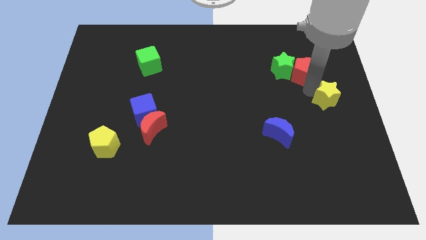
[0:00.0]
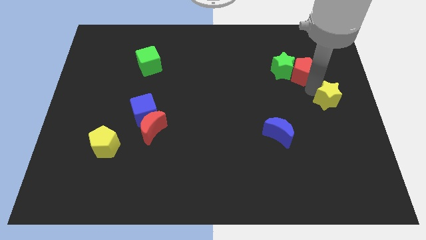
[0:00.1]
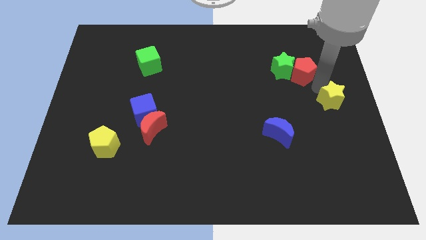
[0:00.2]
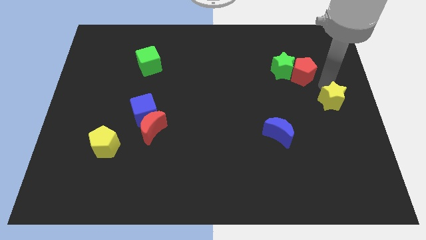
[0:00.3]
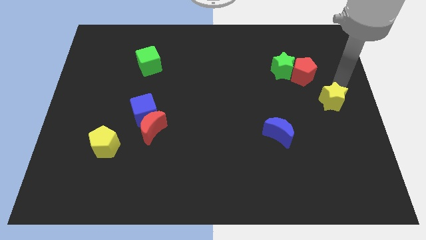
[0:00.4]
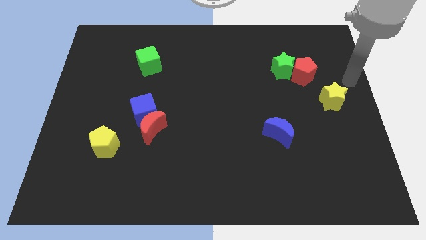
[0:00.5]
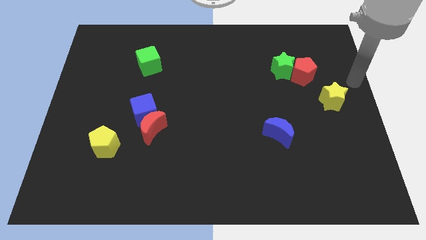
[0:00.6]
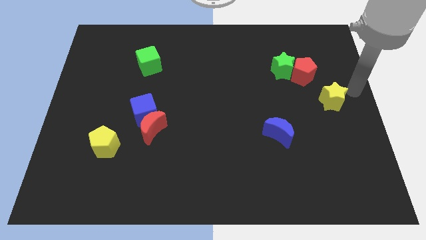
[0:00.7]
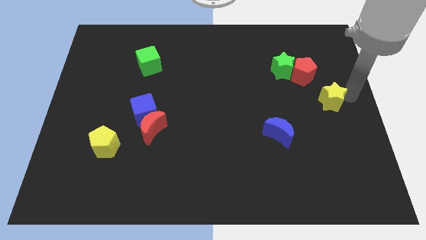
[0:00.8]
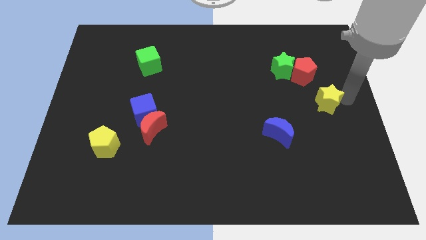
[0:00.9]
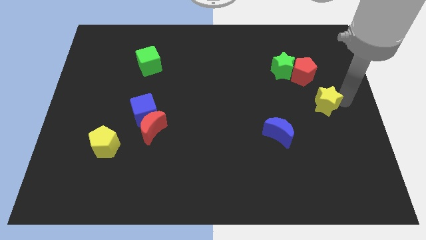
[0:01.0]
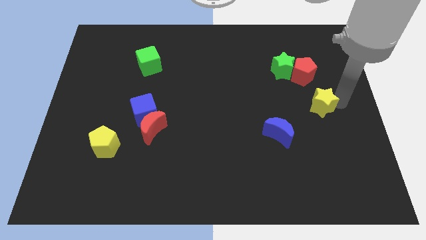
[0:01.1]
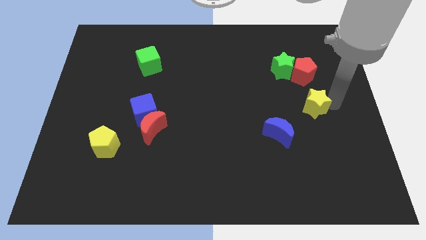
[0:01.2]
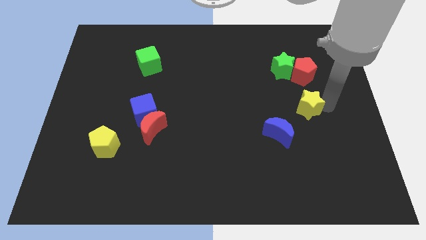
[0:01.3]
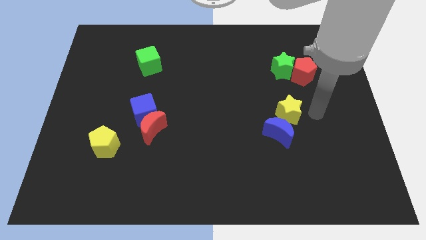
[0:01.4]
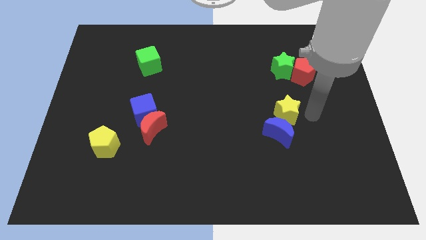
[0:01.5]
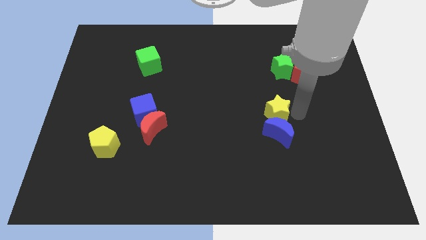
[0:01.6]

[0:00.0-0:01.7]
place yellow star above the blue moon

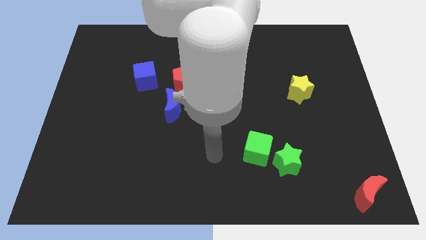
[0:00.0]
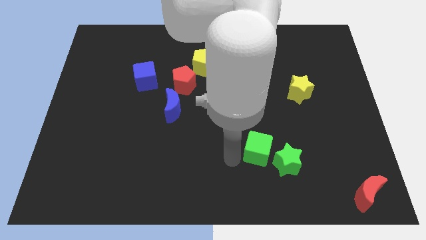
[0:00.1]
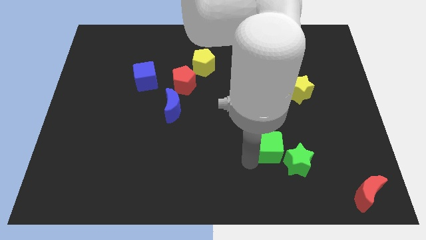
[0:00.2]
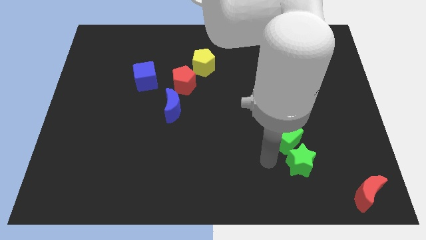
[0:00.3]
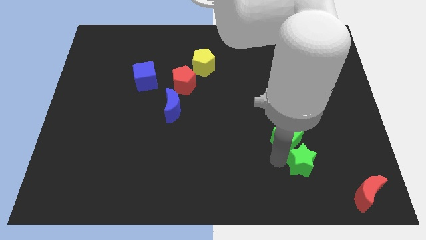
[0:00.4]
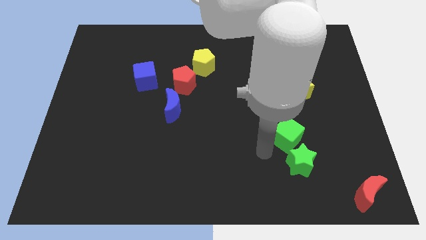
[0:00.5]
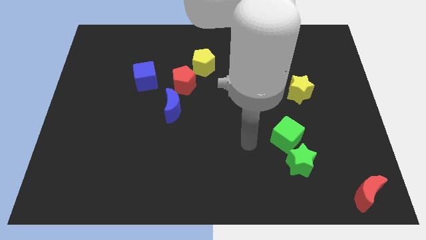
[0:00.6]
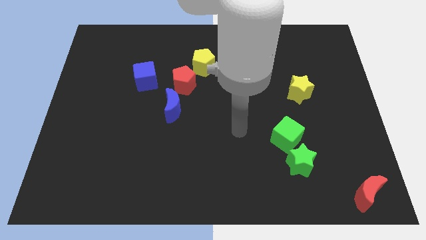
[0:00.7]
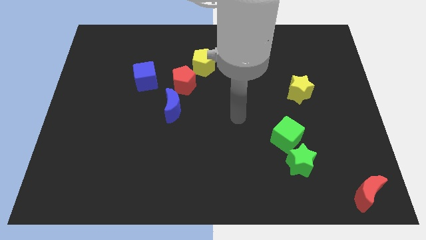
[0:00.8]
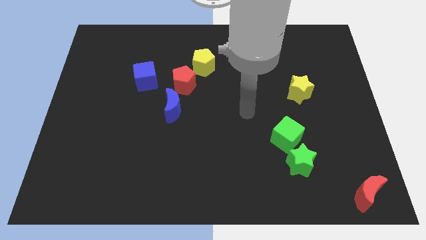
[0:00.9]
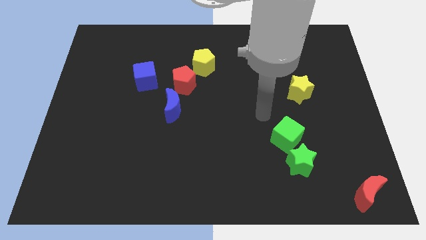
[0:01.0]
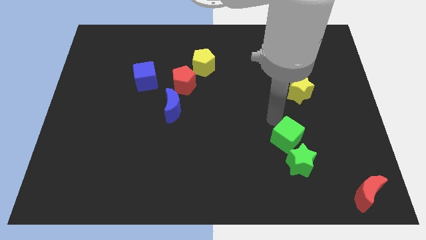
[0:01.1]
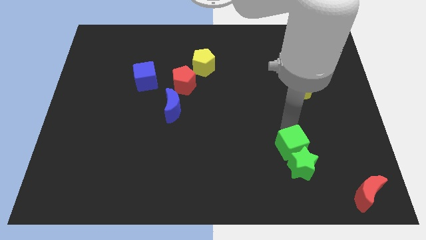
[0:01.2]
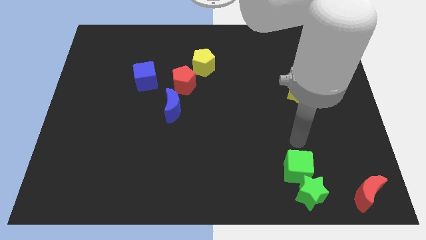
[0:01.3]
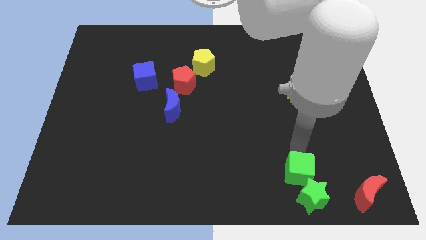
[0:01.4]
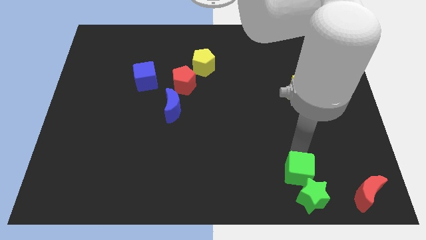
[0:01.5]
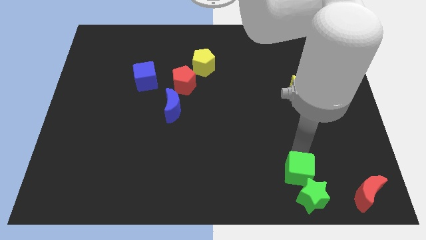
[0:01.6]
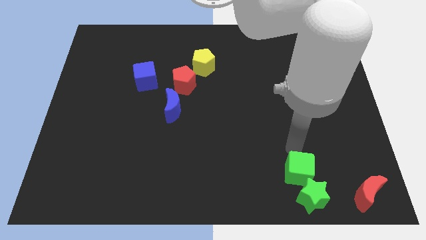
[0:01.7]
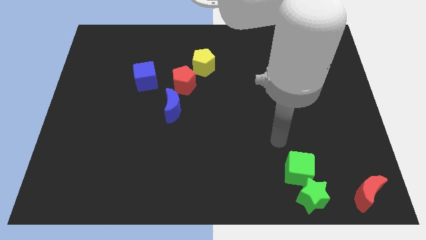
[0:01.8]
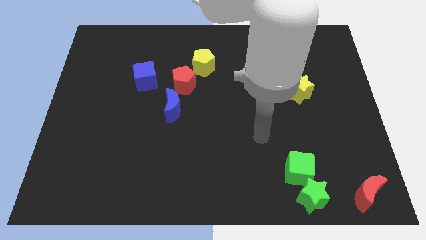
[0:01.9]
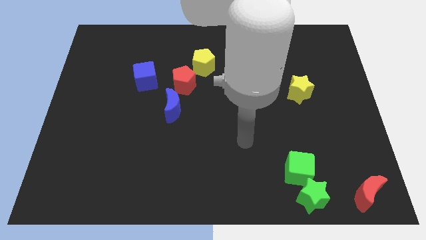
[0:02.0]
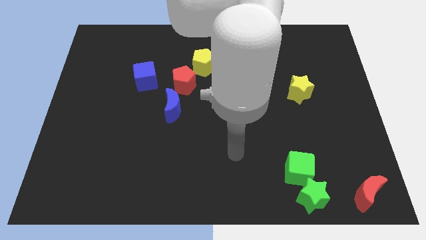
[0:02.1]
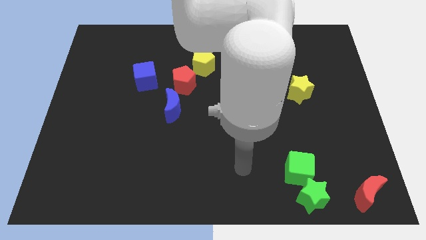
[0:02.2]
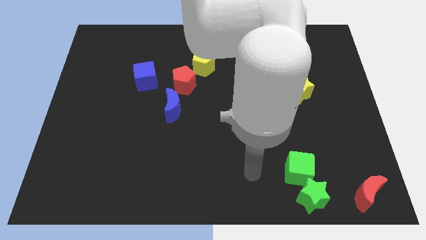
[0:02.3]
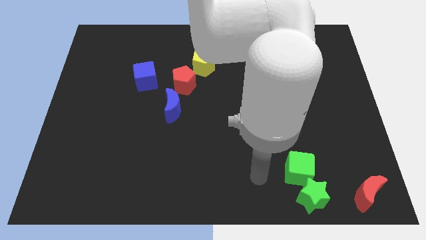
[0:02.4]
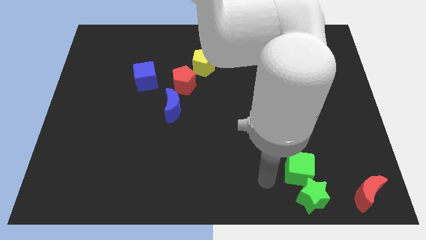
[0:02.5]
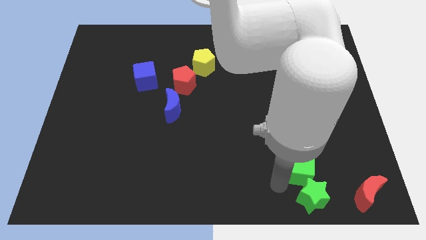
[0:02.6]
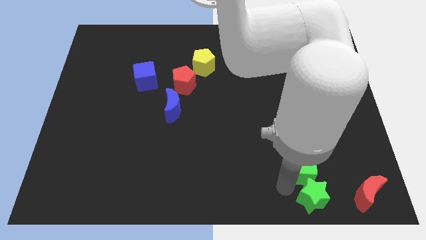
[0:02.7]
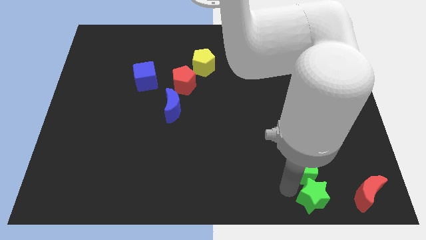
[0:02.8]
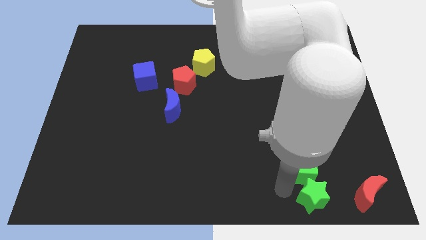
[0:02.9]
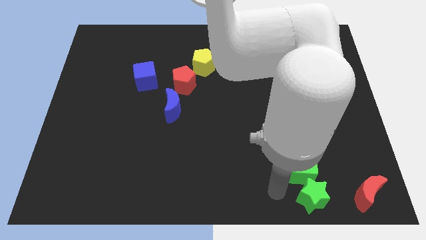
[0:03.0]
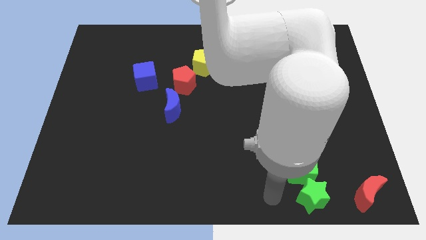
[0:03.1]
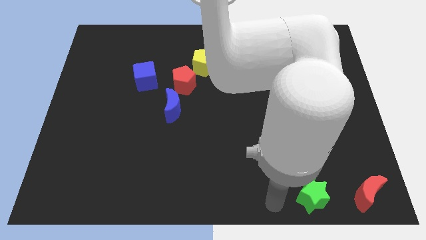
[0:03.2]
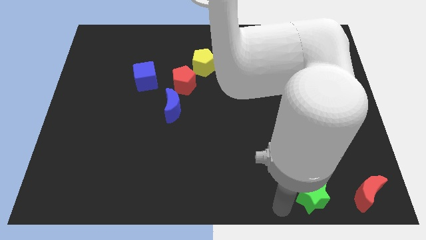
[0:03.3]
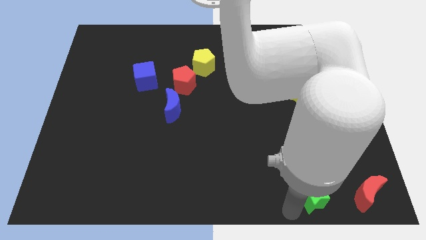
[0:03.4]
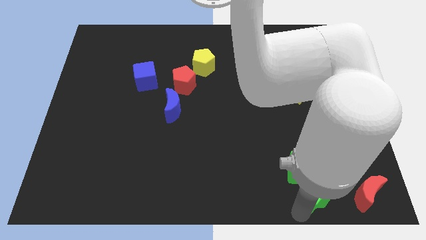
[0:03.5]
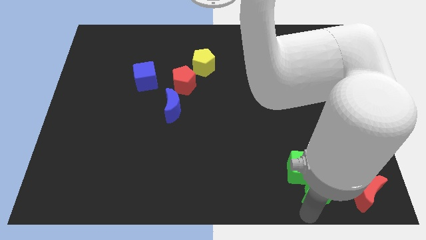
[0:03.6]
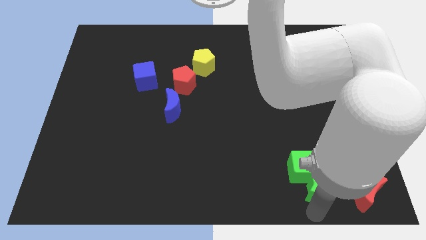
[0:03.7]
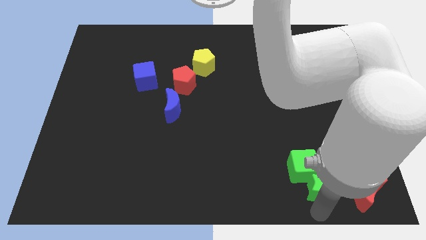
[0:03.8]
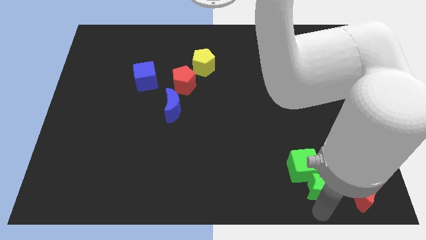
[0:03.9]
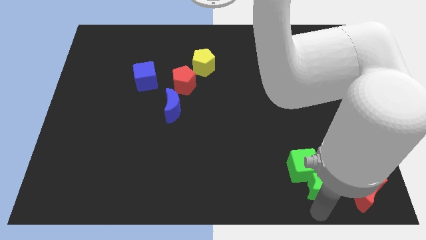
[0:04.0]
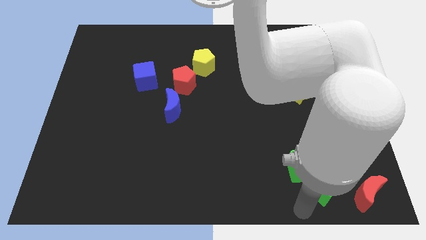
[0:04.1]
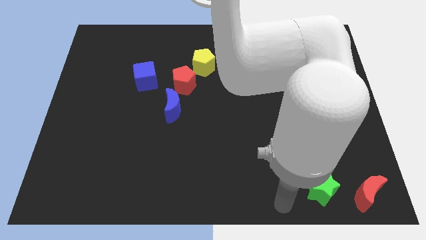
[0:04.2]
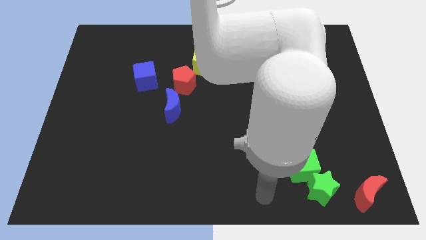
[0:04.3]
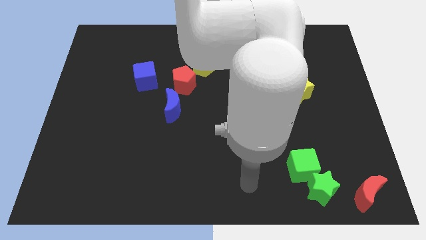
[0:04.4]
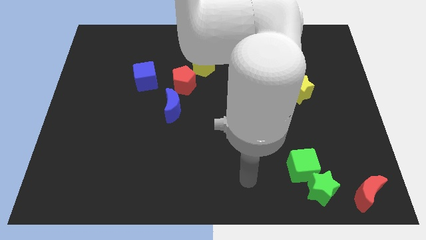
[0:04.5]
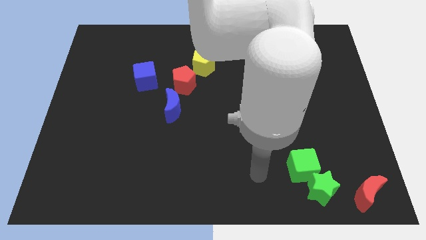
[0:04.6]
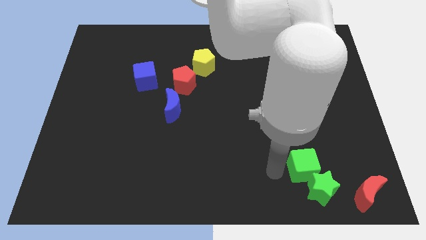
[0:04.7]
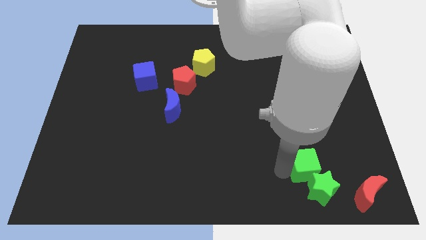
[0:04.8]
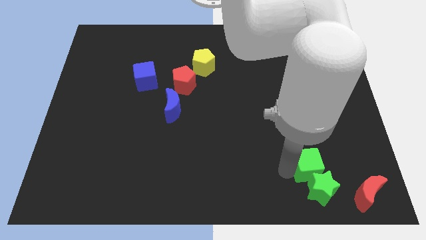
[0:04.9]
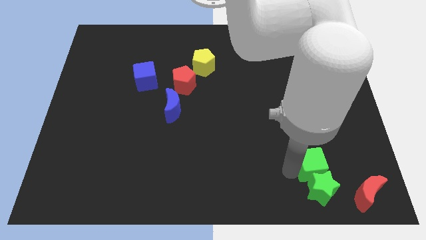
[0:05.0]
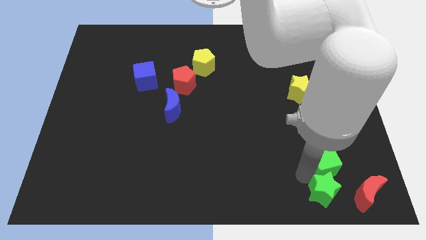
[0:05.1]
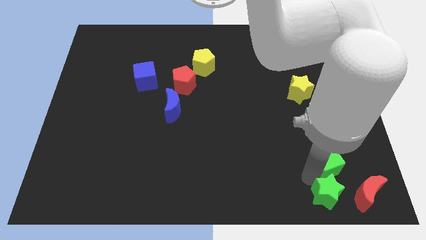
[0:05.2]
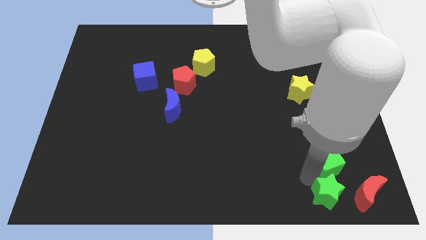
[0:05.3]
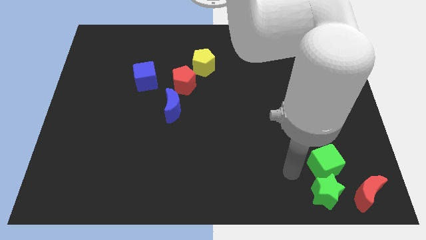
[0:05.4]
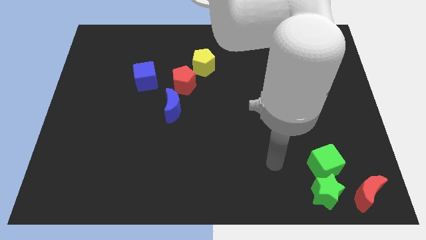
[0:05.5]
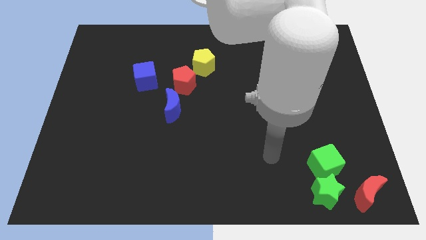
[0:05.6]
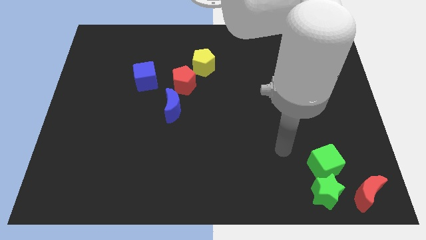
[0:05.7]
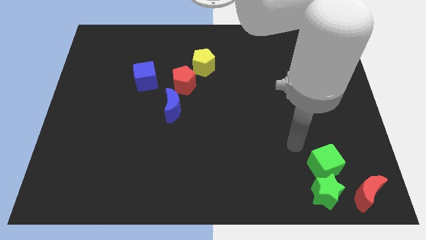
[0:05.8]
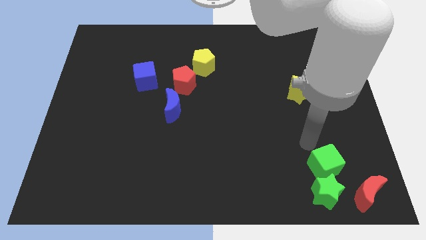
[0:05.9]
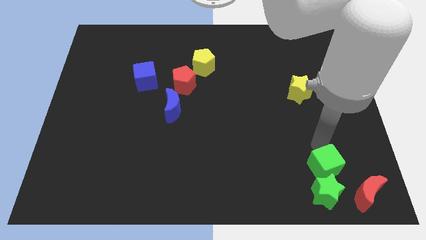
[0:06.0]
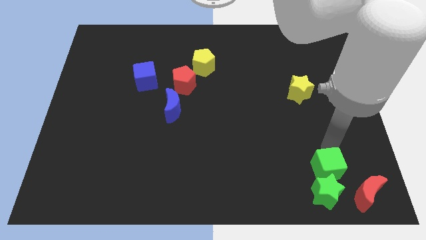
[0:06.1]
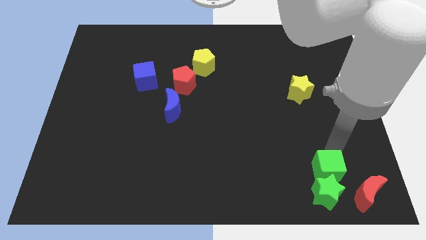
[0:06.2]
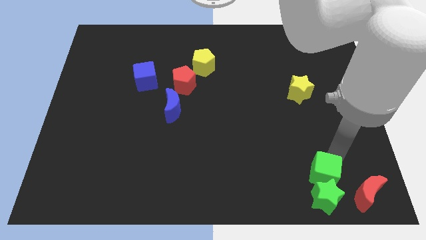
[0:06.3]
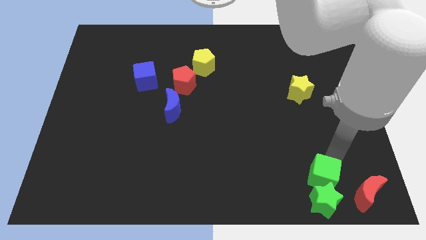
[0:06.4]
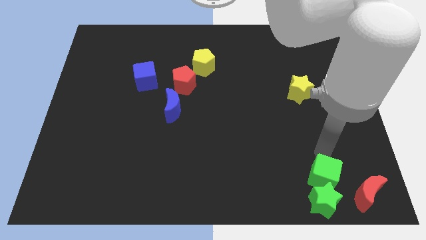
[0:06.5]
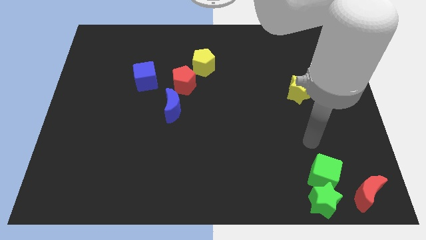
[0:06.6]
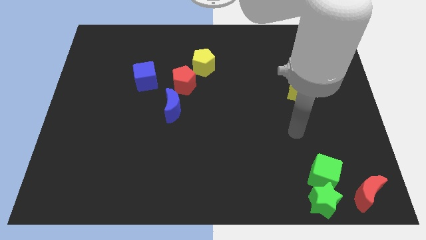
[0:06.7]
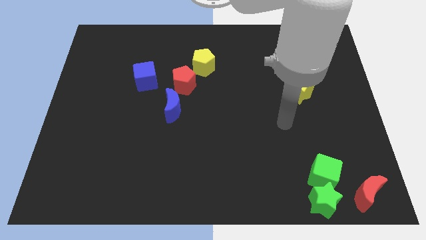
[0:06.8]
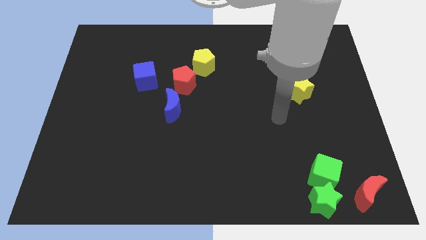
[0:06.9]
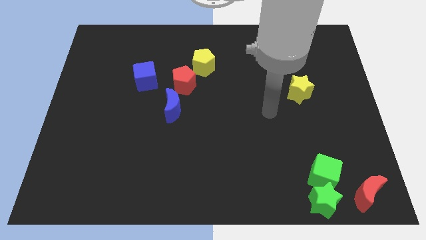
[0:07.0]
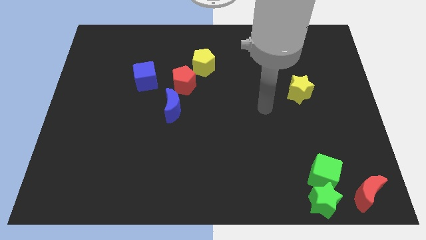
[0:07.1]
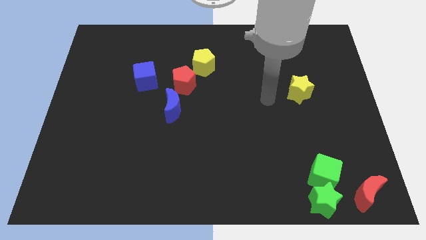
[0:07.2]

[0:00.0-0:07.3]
move the green cube and the green star towards red crescent
